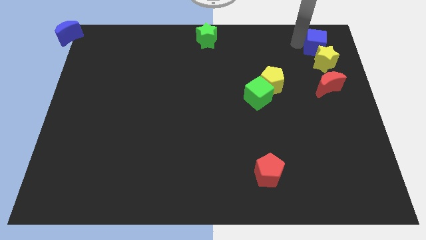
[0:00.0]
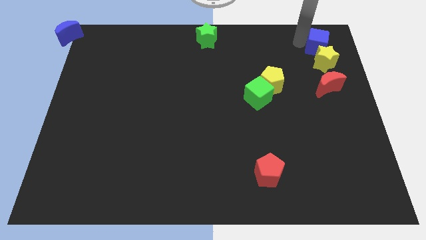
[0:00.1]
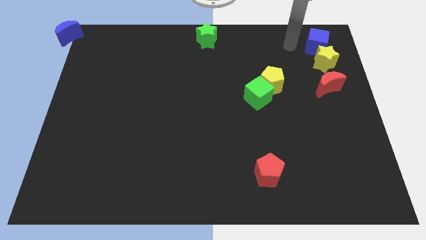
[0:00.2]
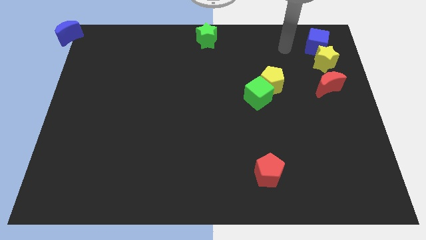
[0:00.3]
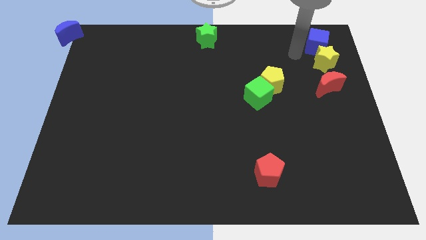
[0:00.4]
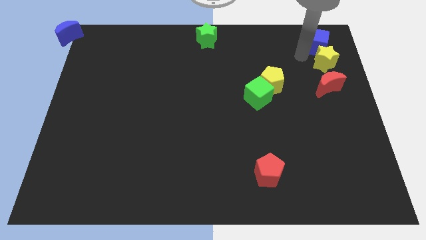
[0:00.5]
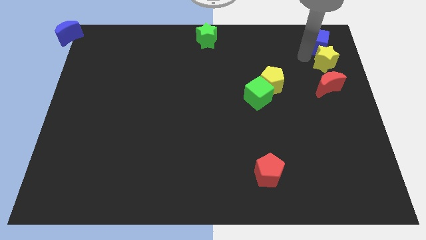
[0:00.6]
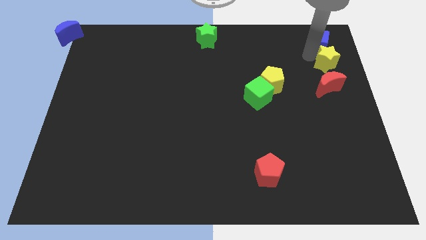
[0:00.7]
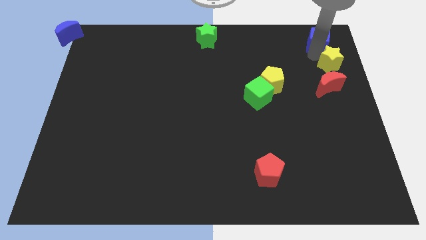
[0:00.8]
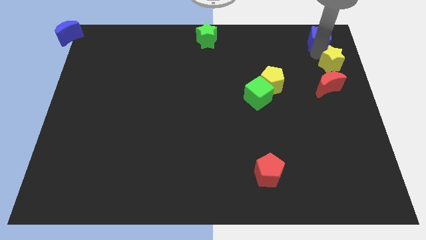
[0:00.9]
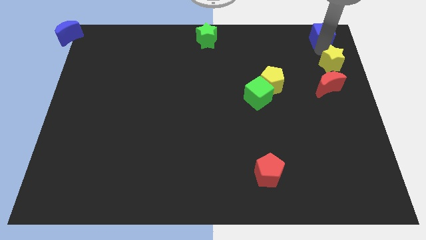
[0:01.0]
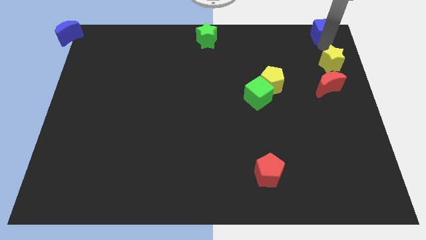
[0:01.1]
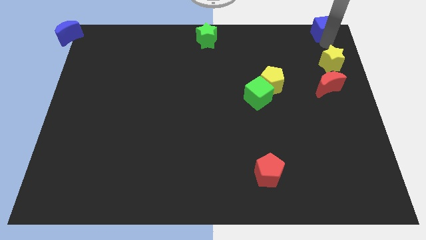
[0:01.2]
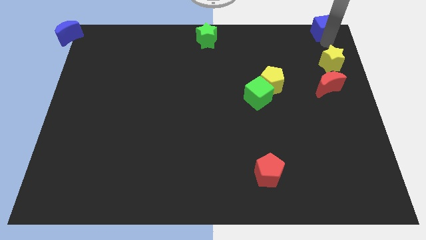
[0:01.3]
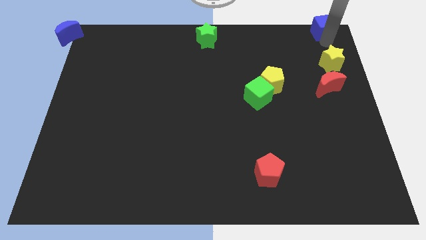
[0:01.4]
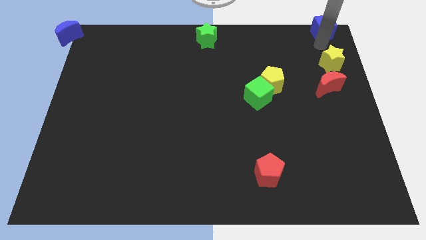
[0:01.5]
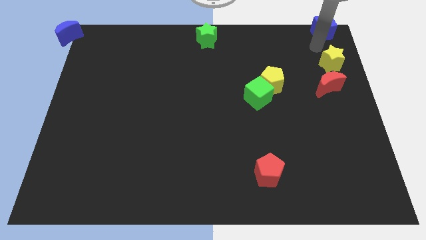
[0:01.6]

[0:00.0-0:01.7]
put the blue cube at the top right corner of the board

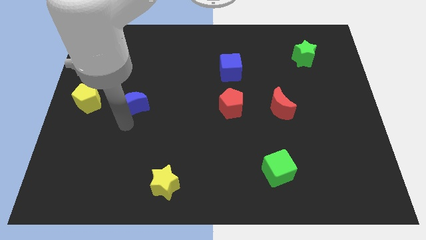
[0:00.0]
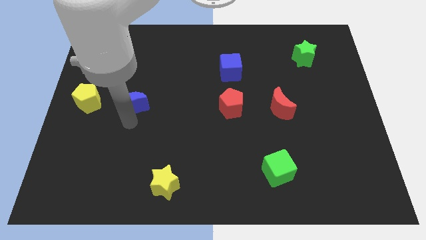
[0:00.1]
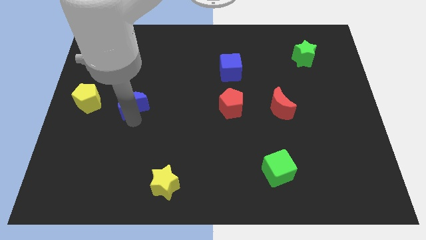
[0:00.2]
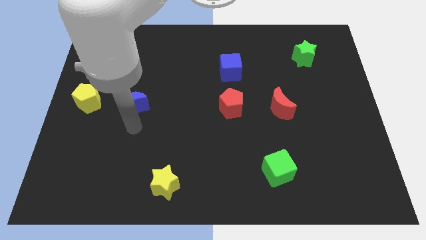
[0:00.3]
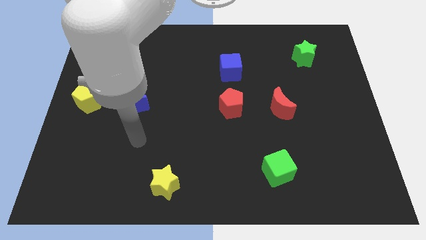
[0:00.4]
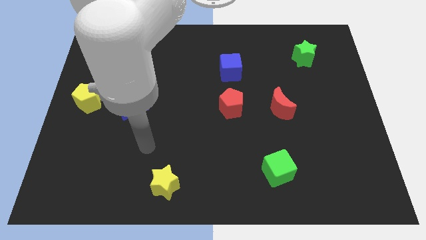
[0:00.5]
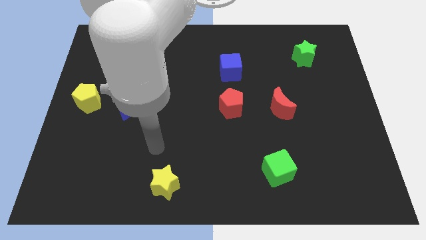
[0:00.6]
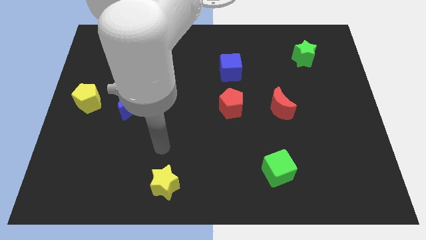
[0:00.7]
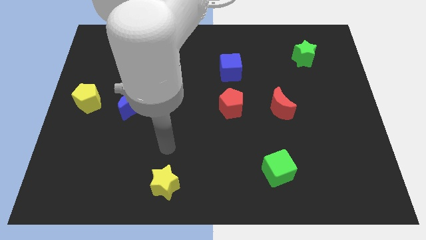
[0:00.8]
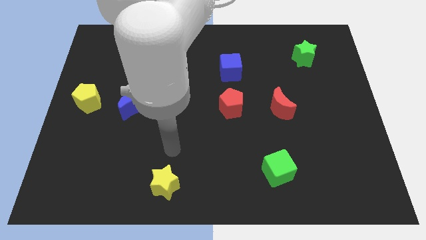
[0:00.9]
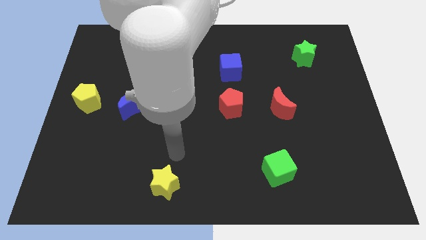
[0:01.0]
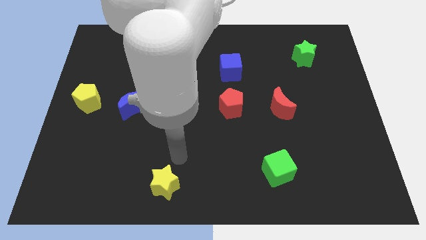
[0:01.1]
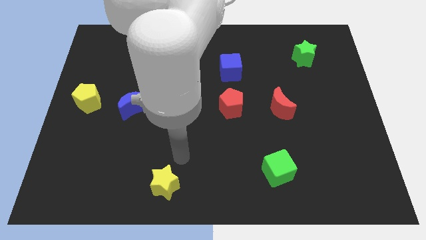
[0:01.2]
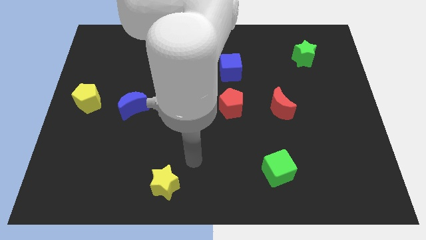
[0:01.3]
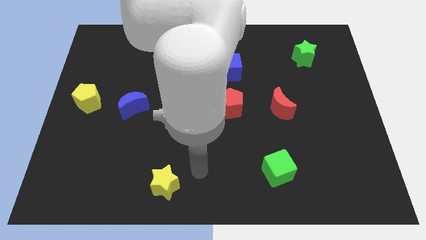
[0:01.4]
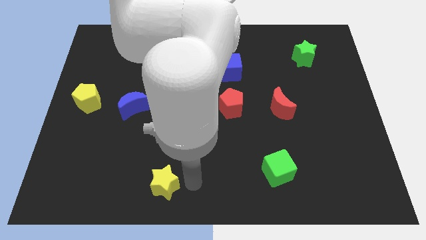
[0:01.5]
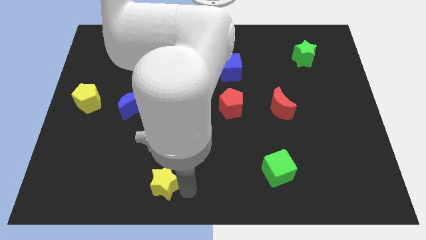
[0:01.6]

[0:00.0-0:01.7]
move away from the blue moon

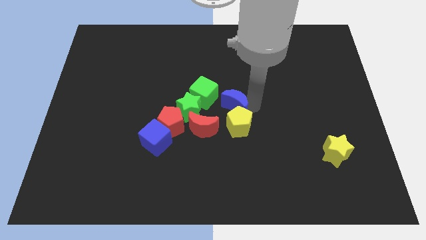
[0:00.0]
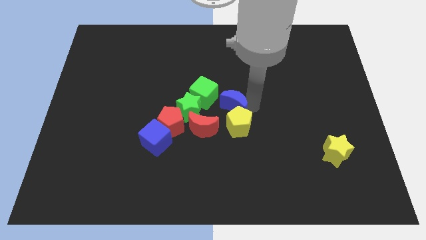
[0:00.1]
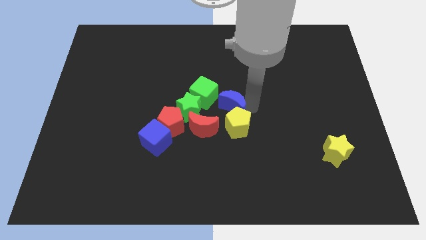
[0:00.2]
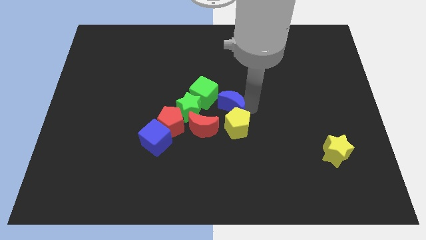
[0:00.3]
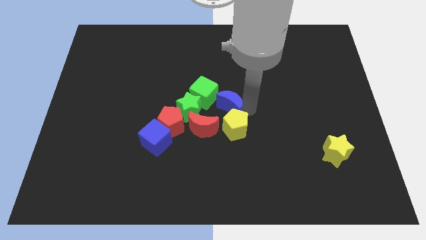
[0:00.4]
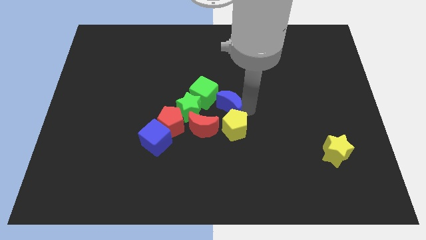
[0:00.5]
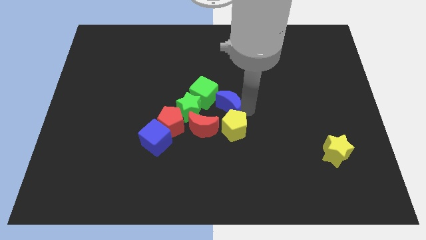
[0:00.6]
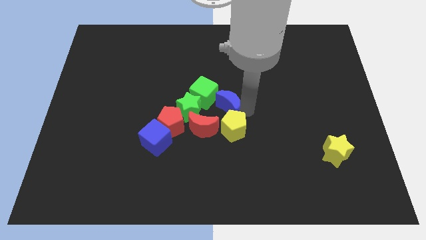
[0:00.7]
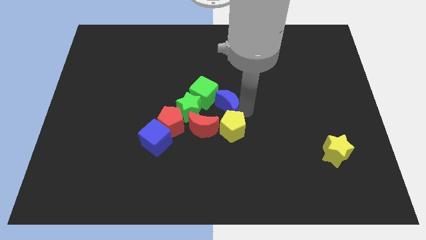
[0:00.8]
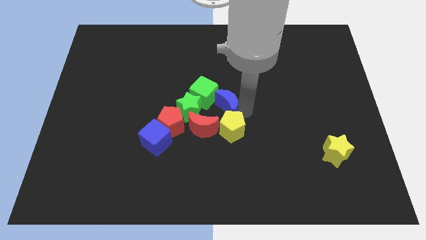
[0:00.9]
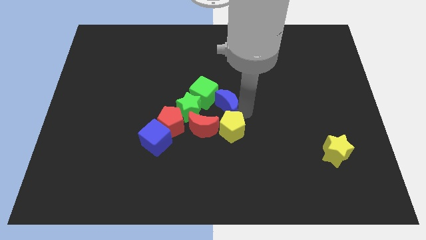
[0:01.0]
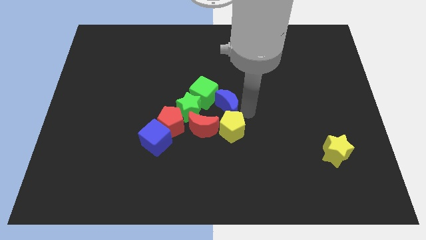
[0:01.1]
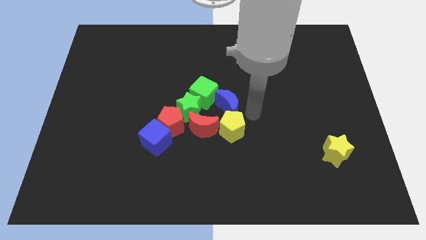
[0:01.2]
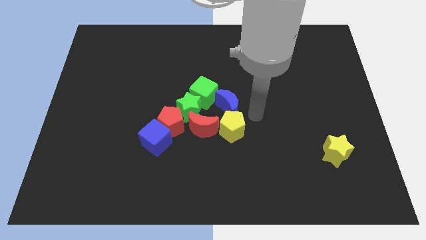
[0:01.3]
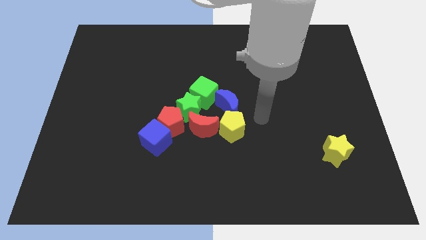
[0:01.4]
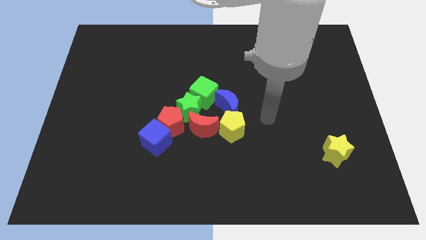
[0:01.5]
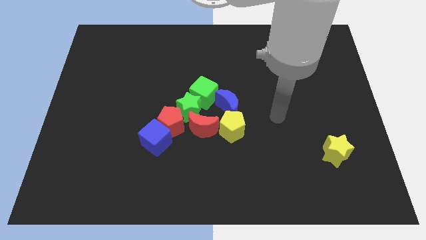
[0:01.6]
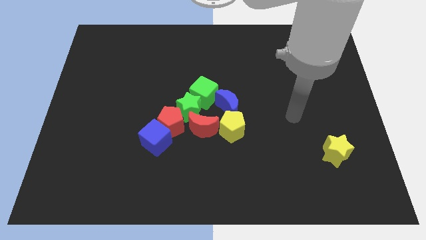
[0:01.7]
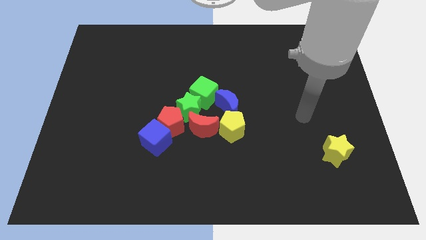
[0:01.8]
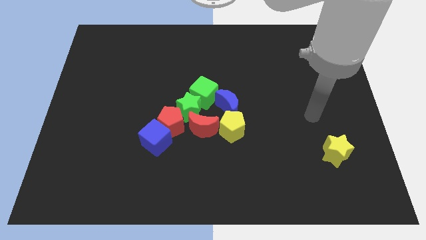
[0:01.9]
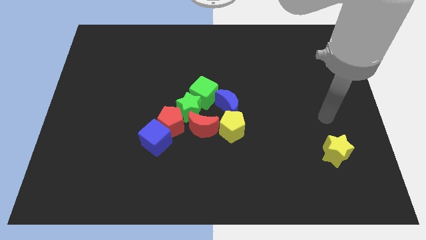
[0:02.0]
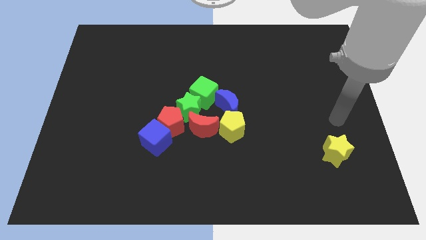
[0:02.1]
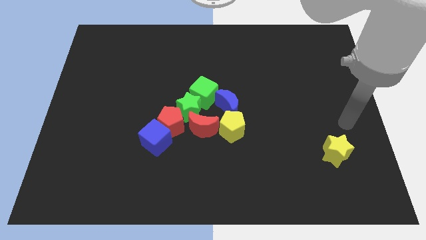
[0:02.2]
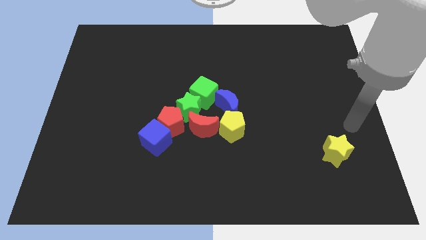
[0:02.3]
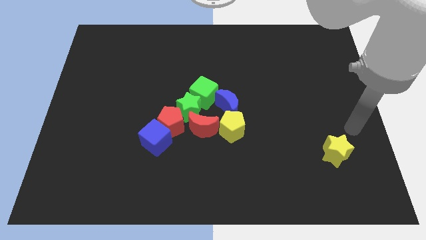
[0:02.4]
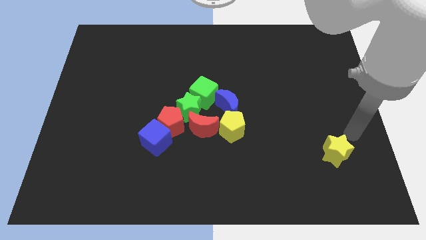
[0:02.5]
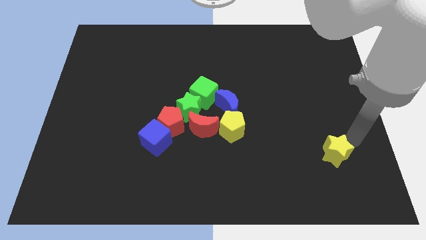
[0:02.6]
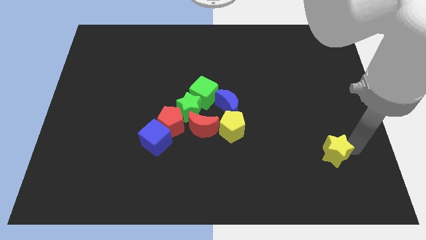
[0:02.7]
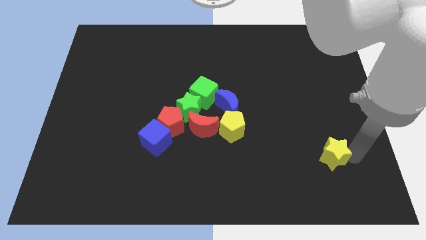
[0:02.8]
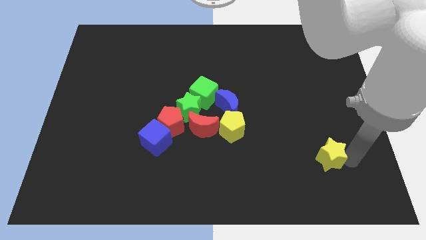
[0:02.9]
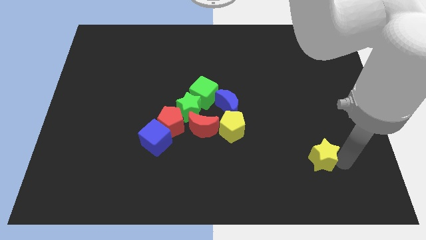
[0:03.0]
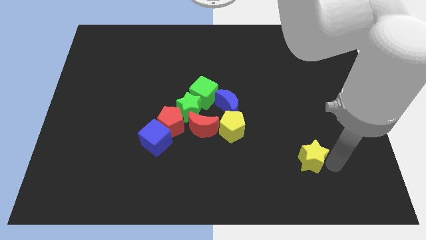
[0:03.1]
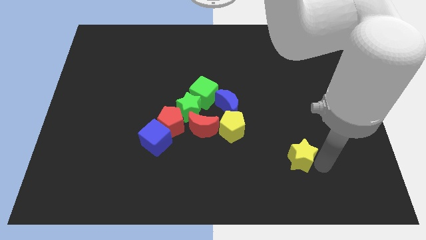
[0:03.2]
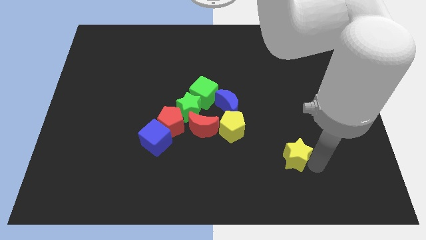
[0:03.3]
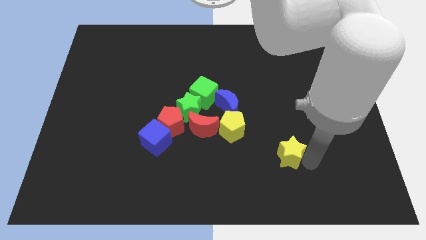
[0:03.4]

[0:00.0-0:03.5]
push the yellow star diagonal to the bottom right to the yellow pentagon

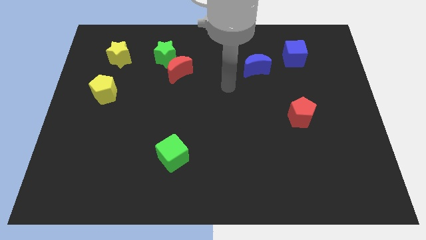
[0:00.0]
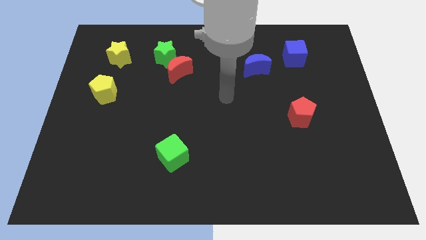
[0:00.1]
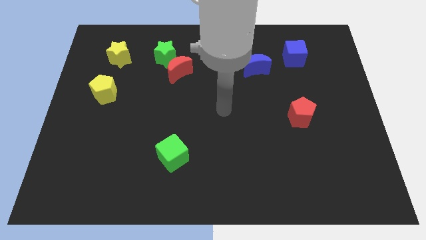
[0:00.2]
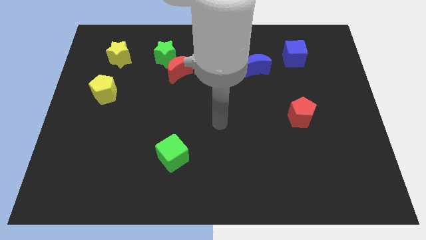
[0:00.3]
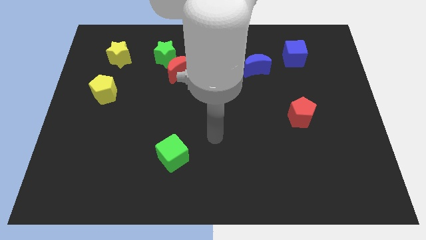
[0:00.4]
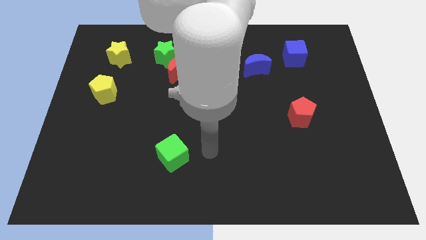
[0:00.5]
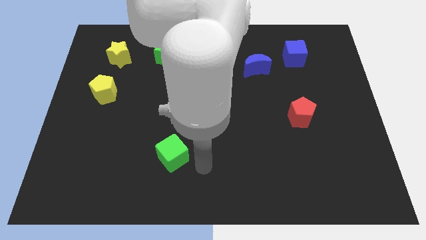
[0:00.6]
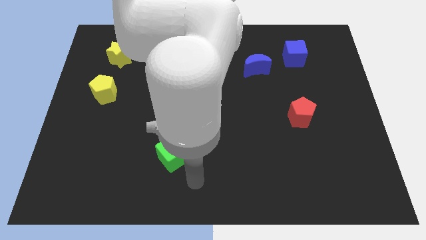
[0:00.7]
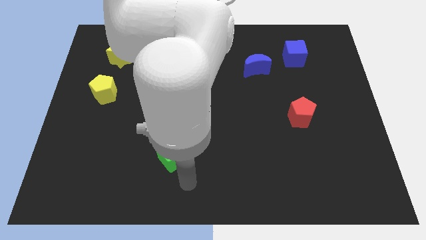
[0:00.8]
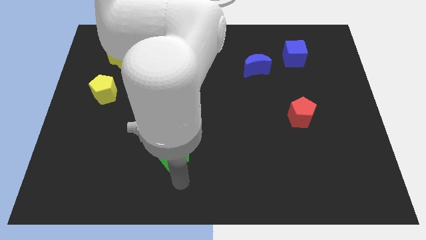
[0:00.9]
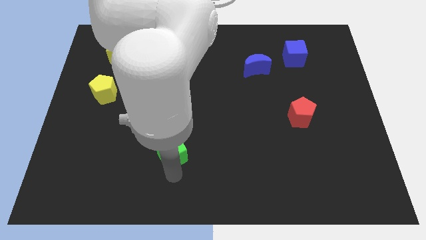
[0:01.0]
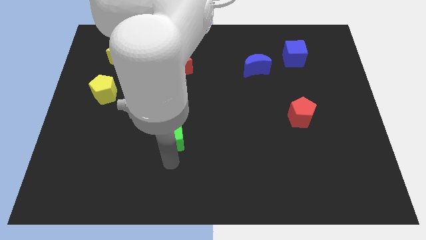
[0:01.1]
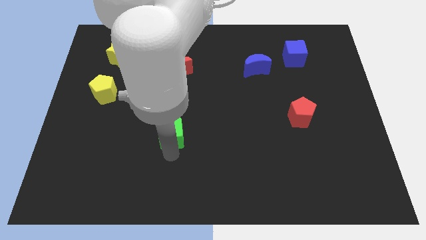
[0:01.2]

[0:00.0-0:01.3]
move the green cube towards red crescent

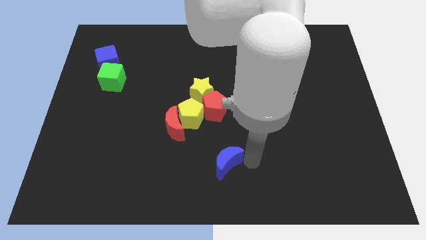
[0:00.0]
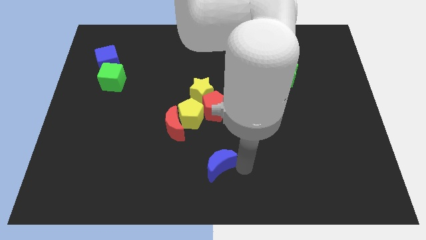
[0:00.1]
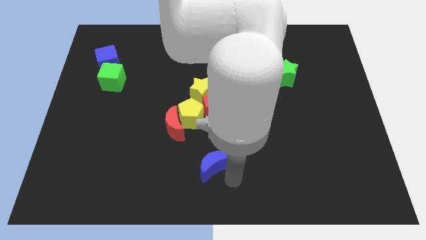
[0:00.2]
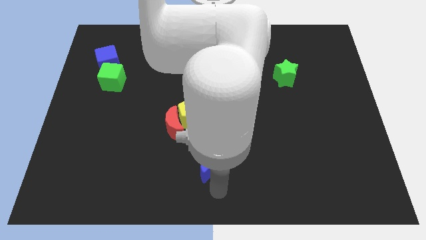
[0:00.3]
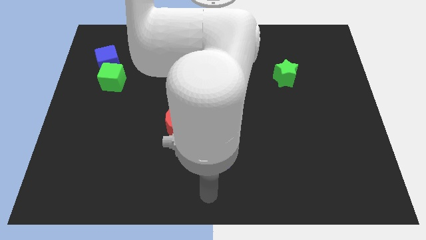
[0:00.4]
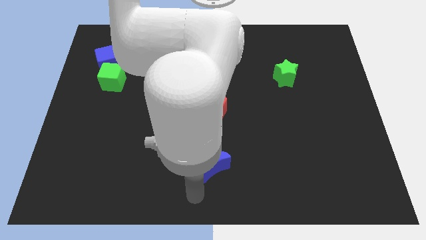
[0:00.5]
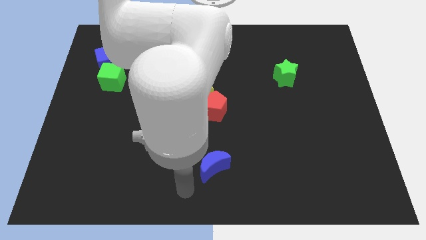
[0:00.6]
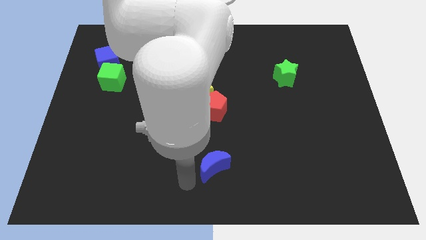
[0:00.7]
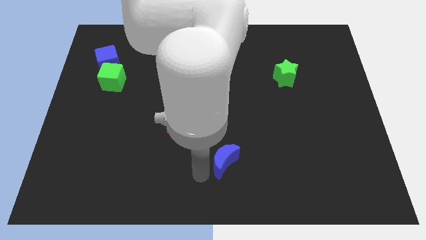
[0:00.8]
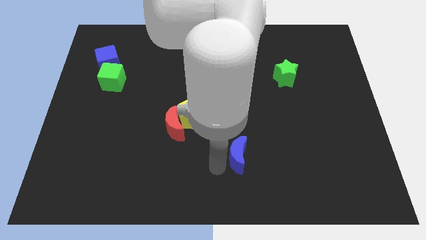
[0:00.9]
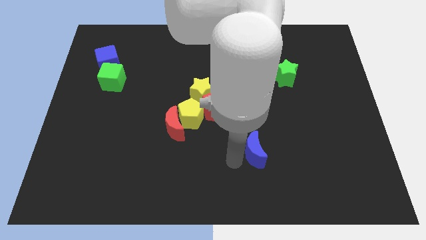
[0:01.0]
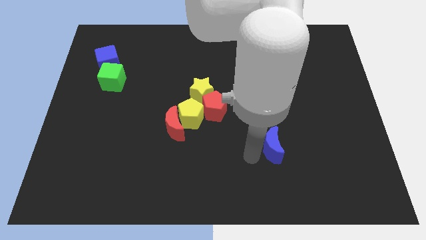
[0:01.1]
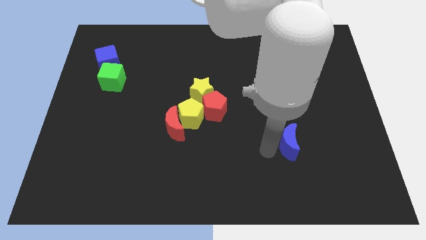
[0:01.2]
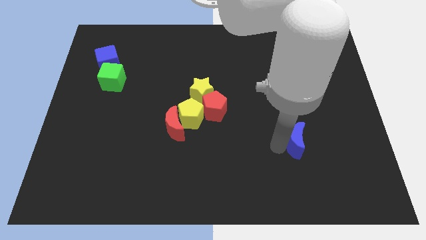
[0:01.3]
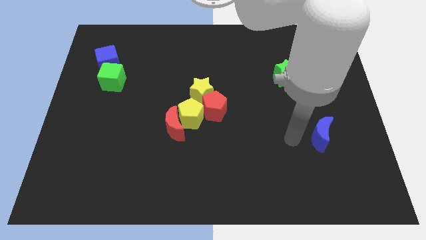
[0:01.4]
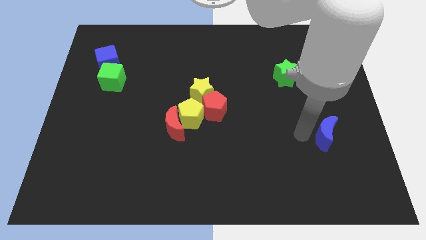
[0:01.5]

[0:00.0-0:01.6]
push the blue crescent slightly right corner to the board
